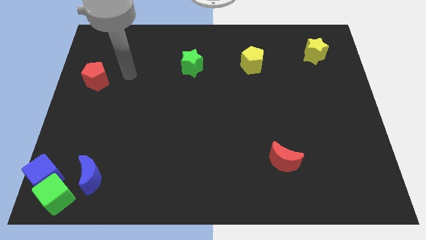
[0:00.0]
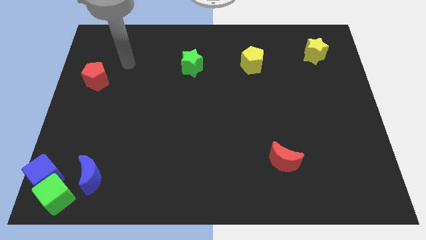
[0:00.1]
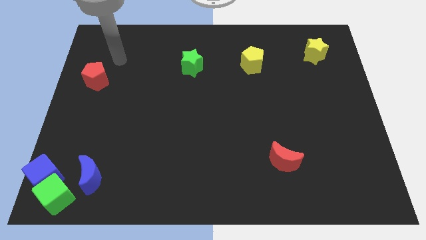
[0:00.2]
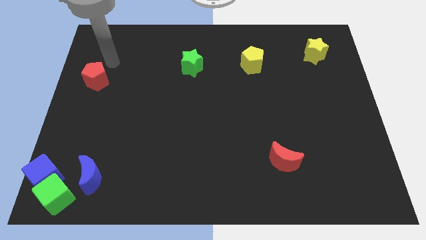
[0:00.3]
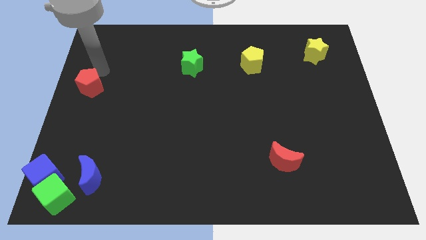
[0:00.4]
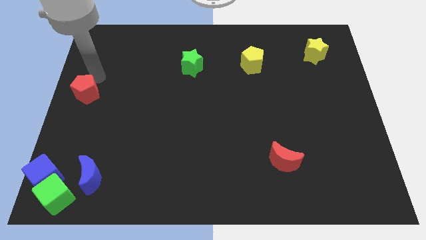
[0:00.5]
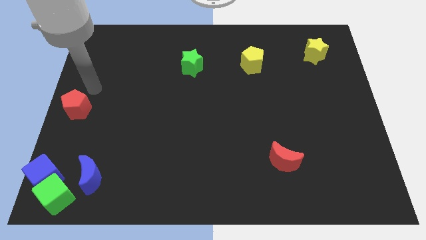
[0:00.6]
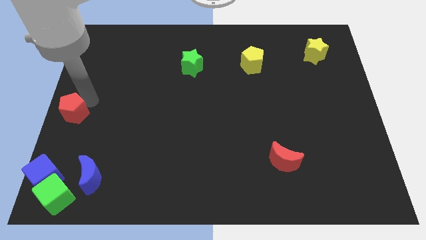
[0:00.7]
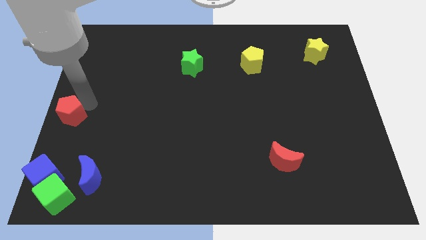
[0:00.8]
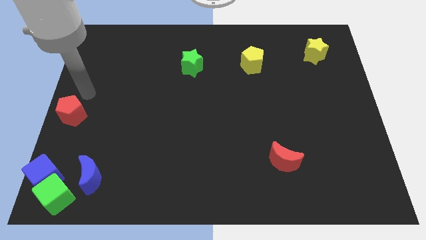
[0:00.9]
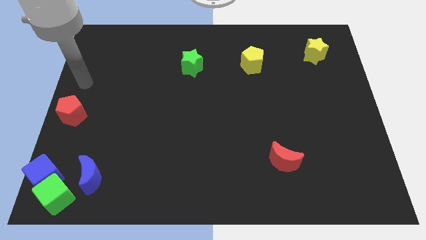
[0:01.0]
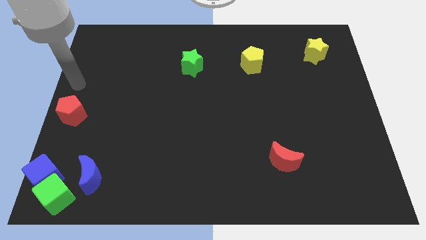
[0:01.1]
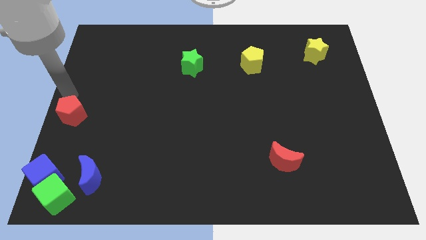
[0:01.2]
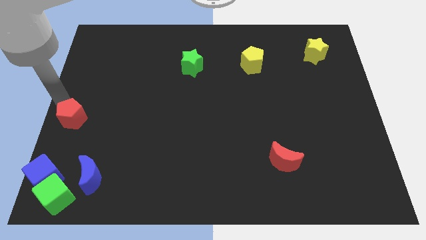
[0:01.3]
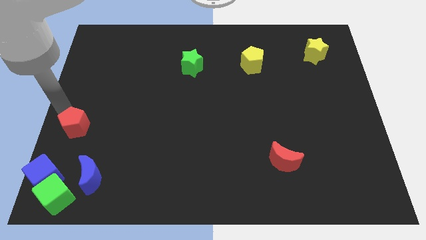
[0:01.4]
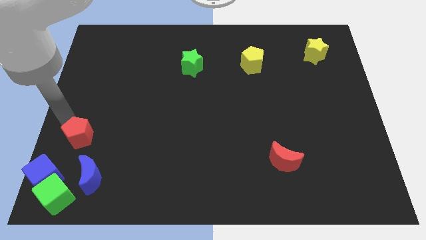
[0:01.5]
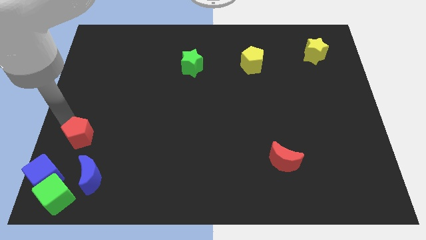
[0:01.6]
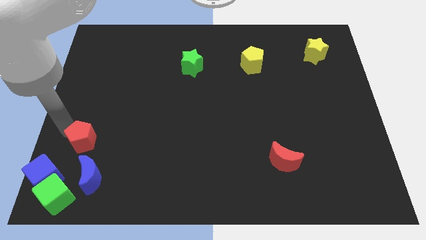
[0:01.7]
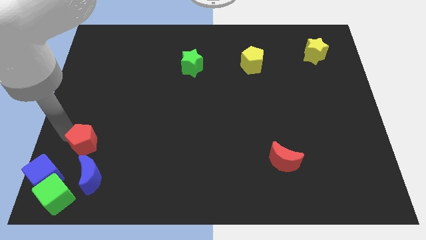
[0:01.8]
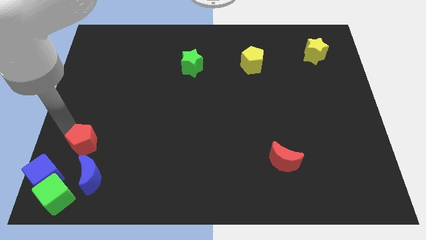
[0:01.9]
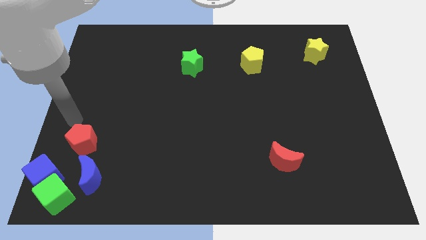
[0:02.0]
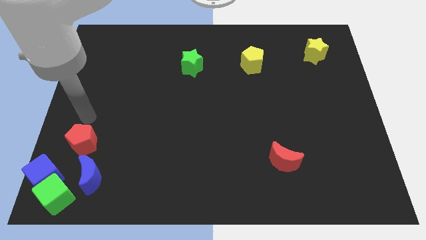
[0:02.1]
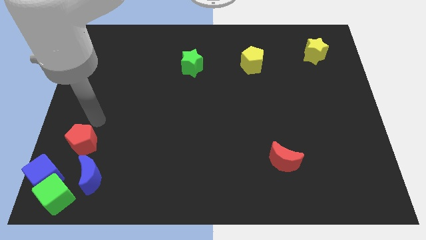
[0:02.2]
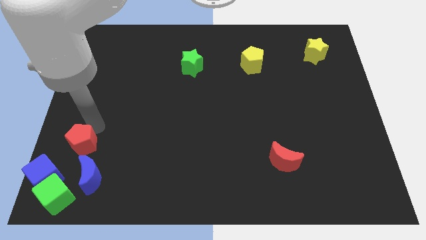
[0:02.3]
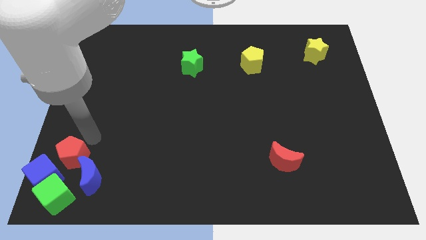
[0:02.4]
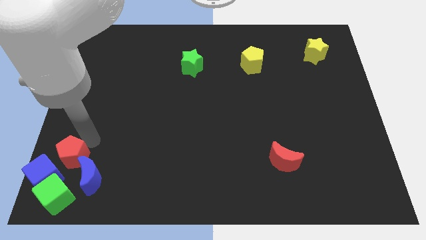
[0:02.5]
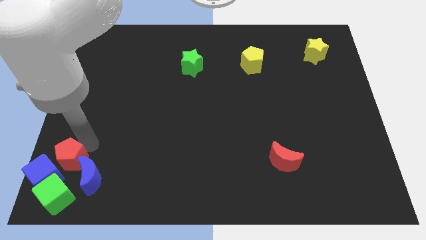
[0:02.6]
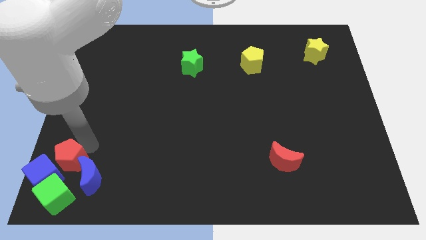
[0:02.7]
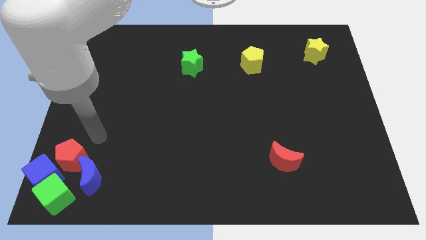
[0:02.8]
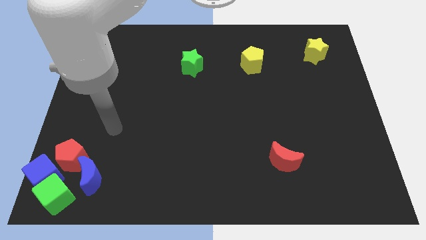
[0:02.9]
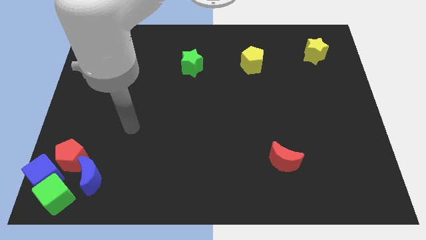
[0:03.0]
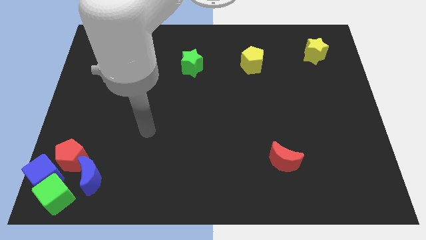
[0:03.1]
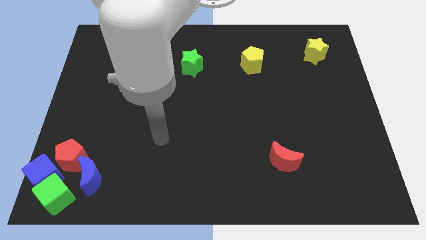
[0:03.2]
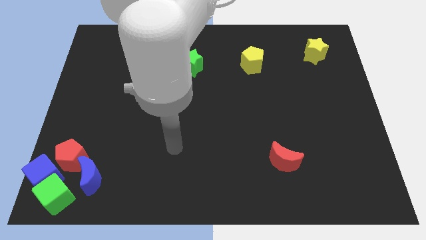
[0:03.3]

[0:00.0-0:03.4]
drag the blue crescent to the right side of red pentagon

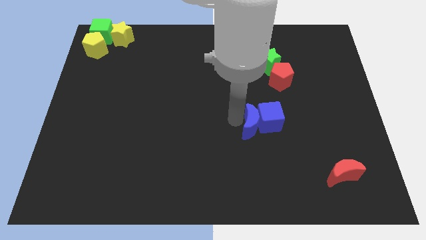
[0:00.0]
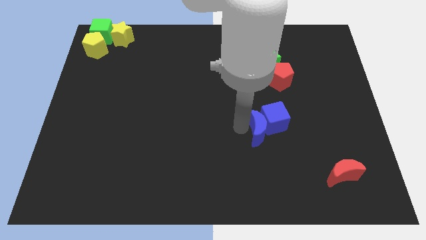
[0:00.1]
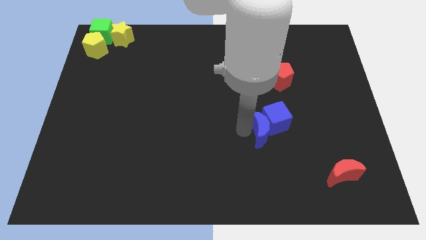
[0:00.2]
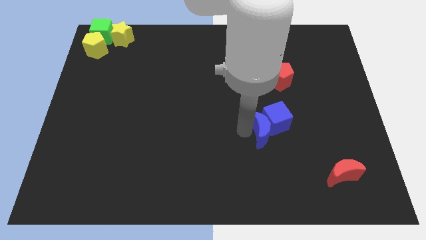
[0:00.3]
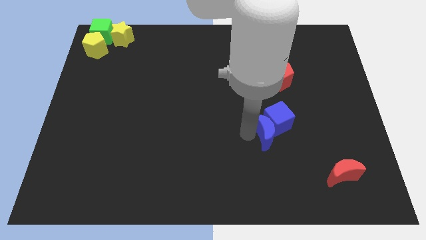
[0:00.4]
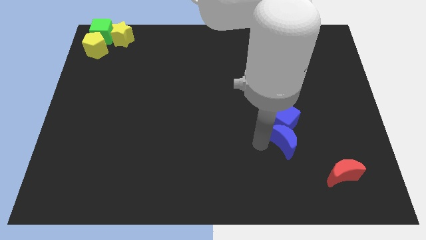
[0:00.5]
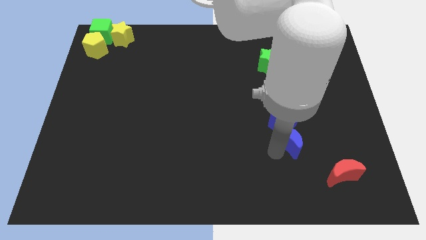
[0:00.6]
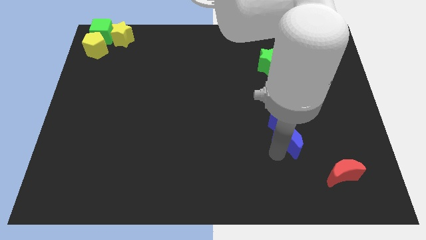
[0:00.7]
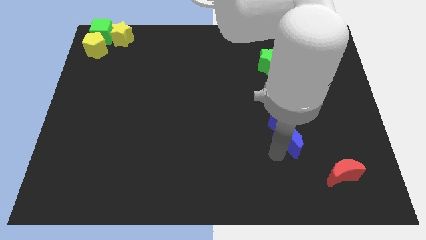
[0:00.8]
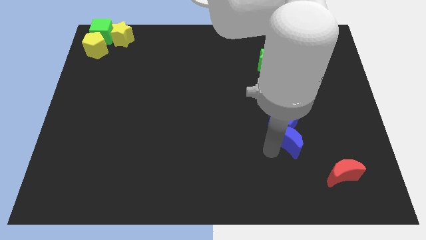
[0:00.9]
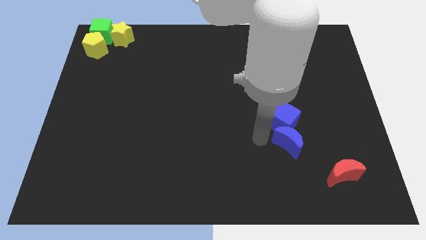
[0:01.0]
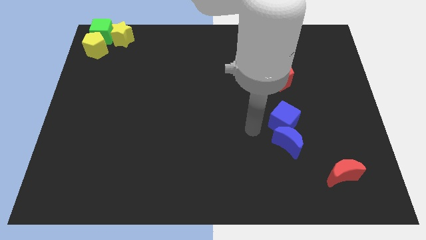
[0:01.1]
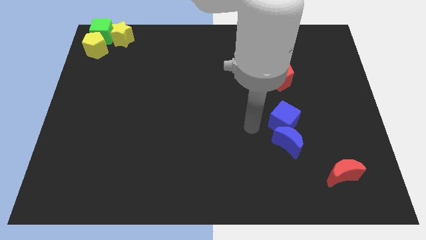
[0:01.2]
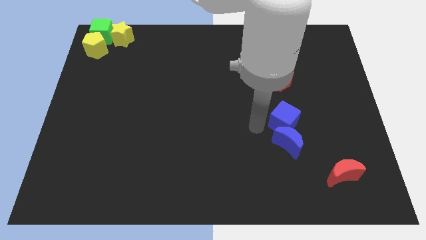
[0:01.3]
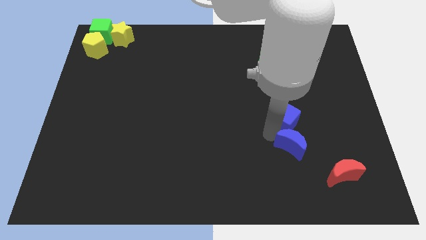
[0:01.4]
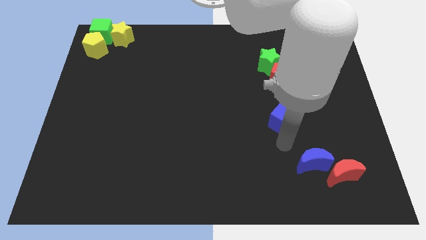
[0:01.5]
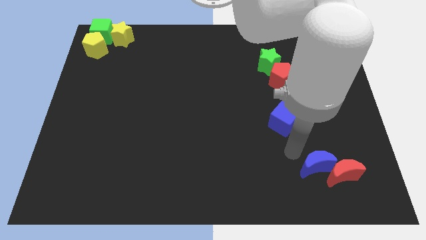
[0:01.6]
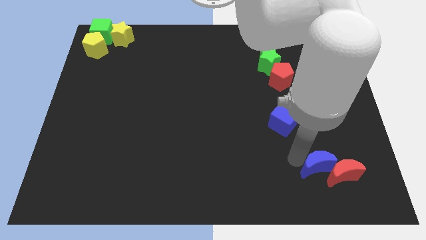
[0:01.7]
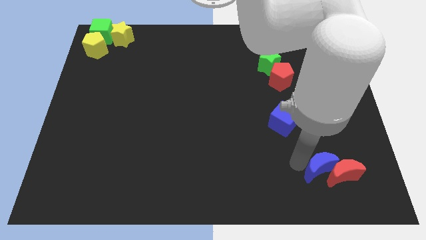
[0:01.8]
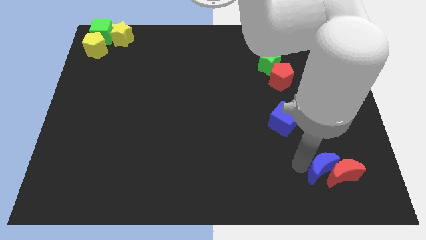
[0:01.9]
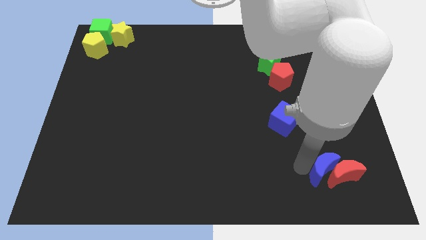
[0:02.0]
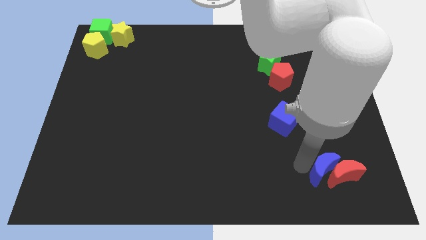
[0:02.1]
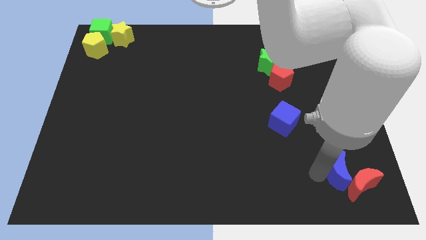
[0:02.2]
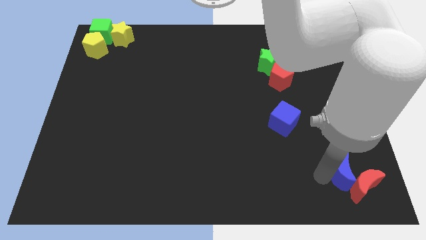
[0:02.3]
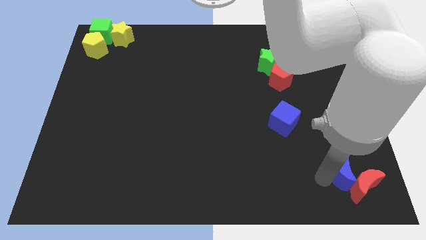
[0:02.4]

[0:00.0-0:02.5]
push blue crescent above red crescent

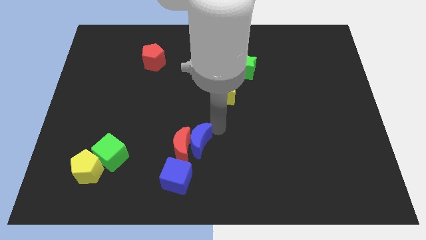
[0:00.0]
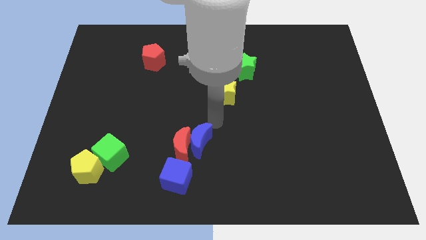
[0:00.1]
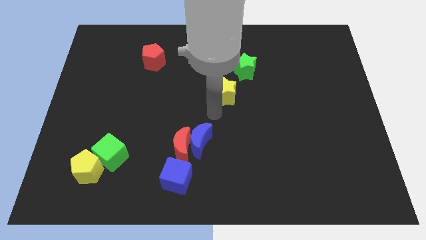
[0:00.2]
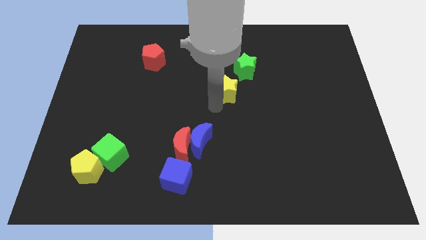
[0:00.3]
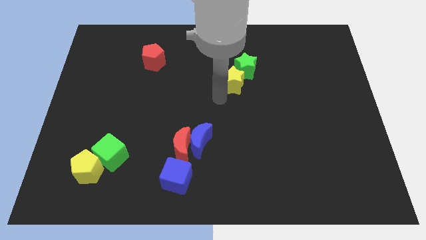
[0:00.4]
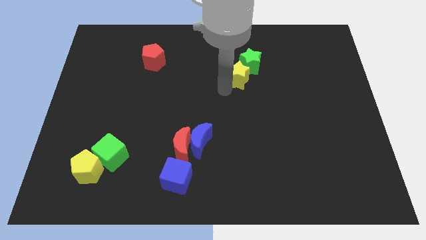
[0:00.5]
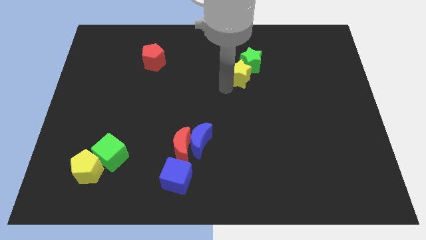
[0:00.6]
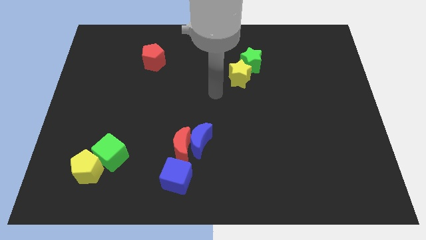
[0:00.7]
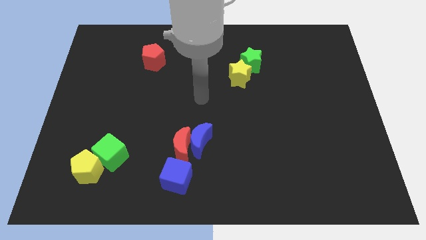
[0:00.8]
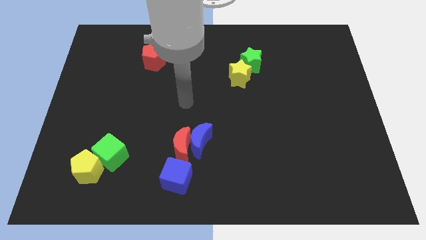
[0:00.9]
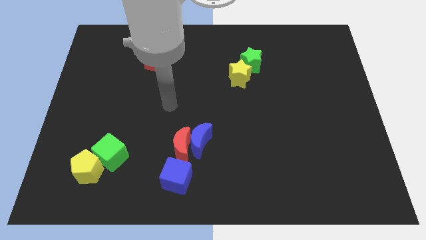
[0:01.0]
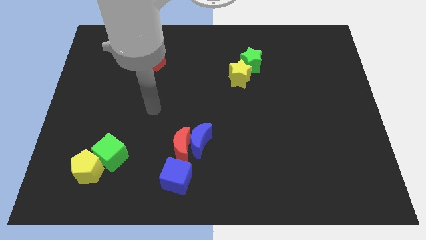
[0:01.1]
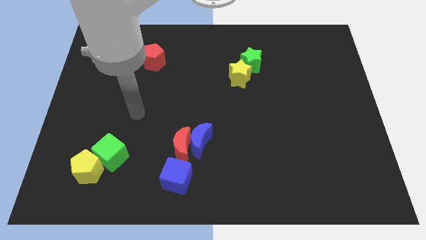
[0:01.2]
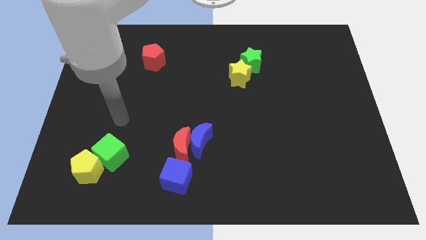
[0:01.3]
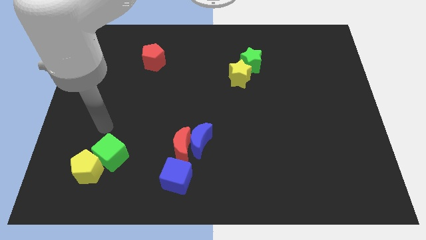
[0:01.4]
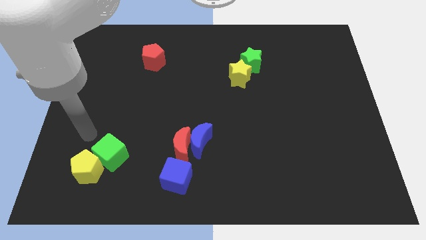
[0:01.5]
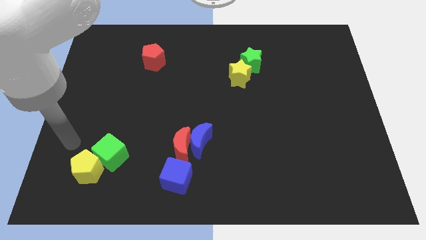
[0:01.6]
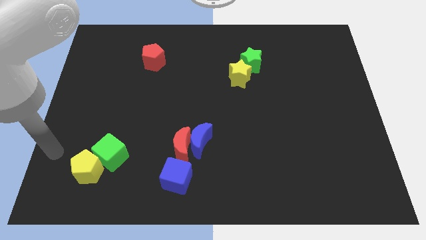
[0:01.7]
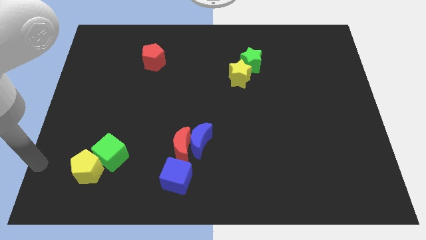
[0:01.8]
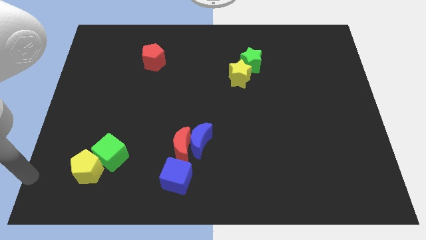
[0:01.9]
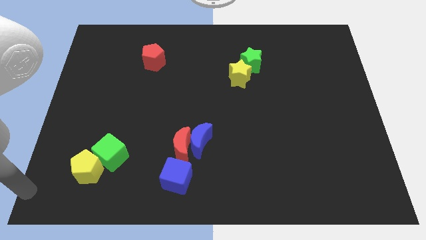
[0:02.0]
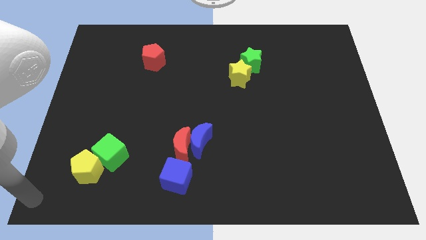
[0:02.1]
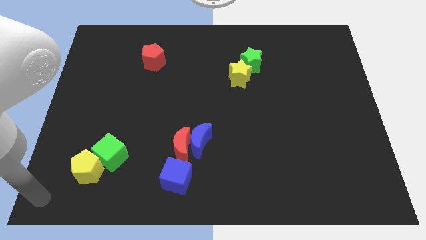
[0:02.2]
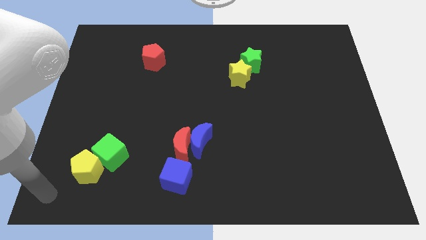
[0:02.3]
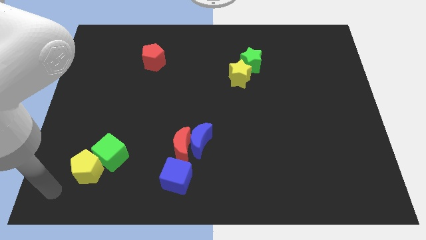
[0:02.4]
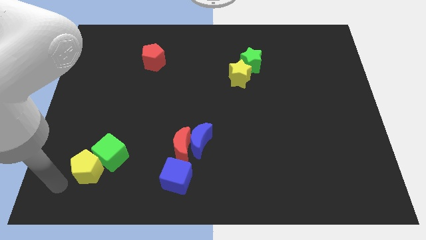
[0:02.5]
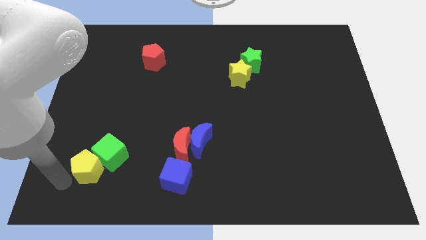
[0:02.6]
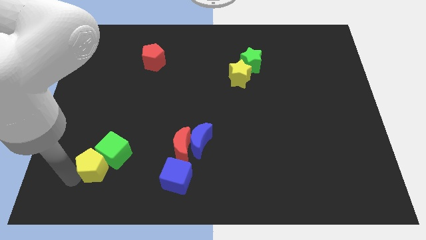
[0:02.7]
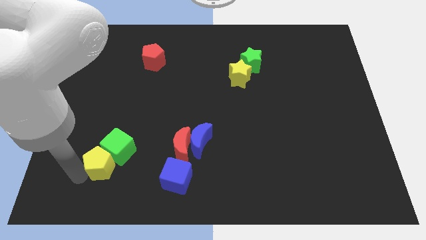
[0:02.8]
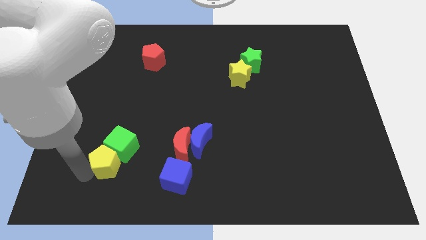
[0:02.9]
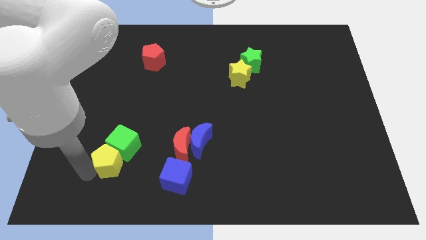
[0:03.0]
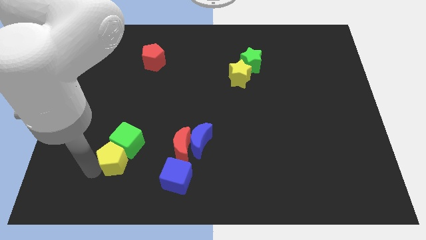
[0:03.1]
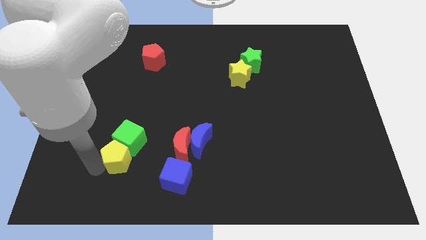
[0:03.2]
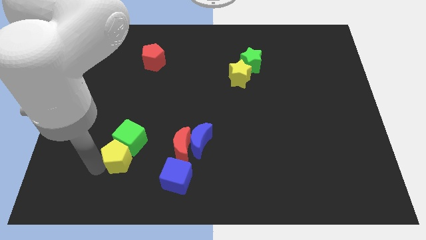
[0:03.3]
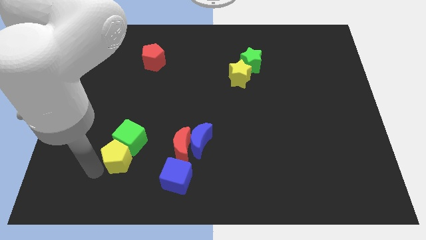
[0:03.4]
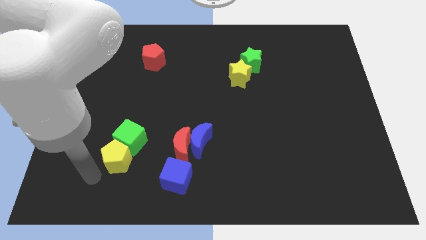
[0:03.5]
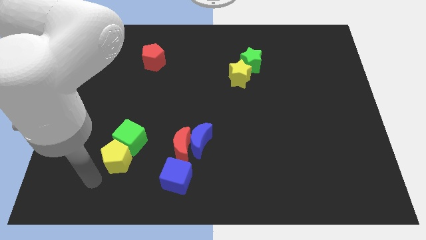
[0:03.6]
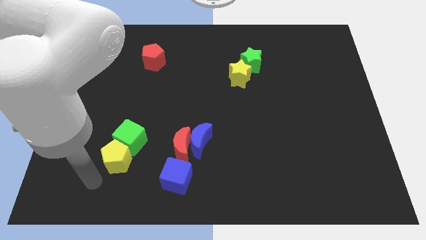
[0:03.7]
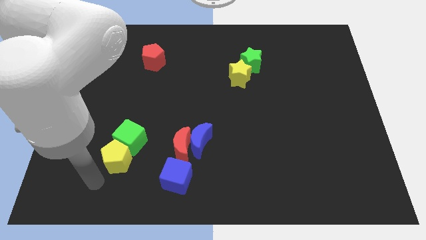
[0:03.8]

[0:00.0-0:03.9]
move the yellow star into the green star
